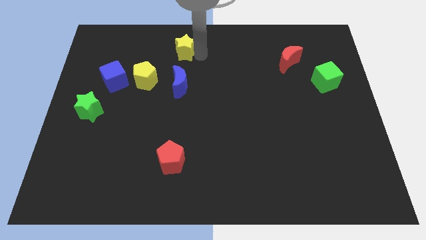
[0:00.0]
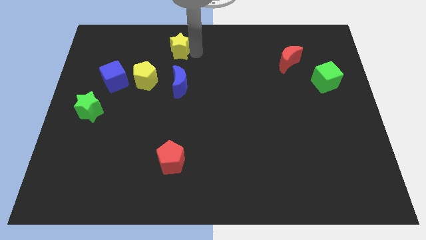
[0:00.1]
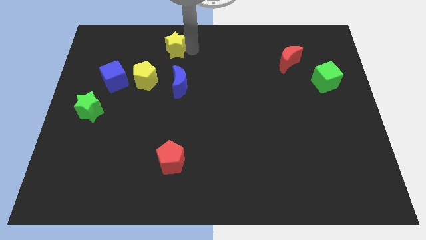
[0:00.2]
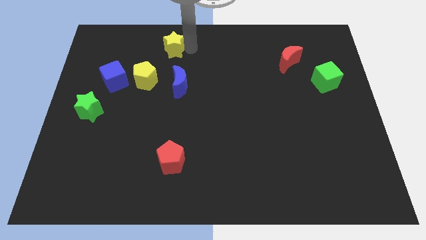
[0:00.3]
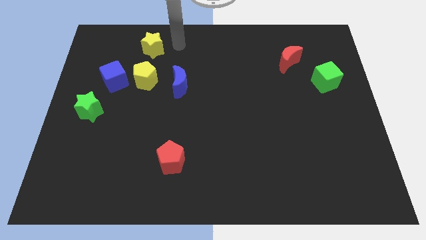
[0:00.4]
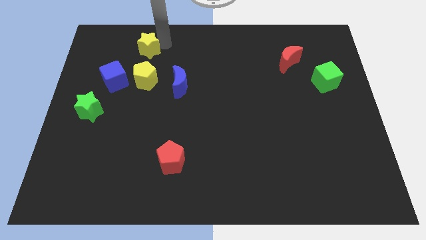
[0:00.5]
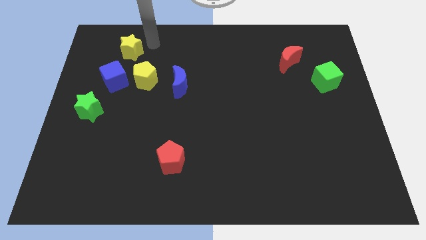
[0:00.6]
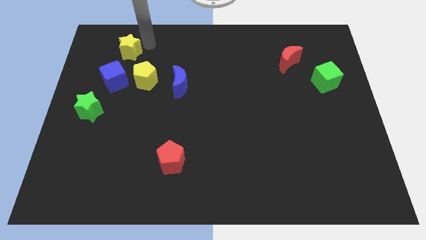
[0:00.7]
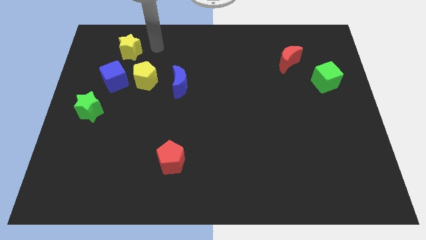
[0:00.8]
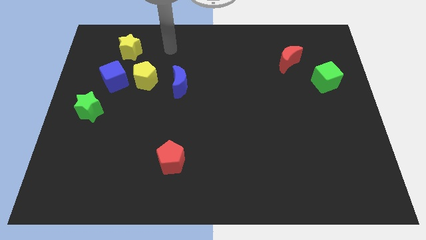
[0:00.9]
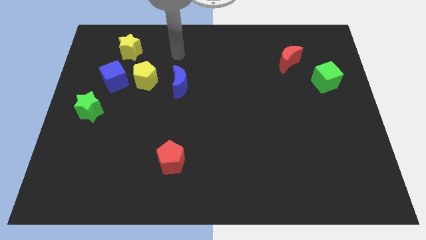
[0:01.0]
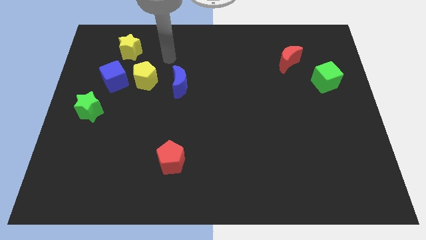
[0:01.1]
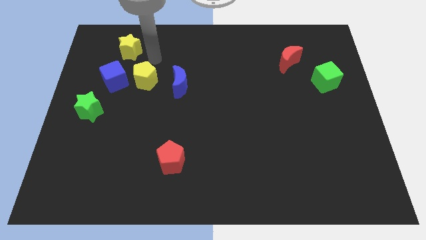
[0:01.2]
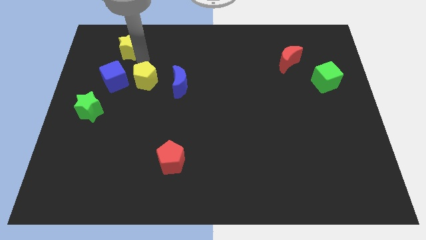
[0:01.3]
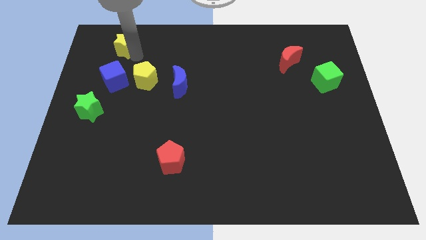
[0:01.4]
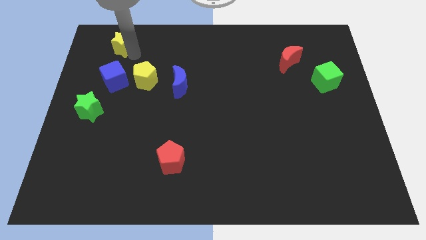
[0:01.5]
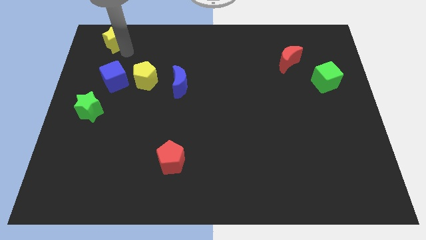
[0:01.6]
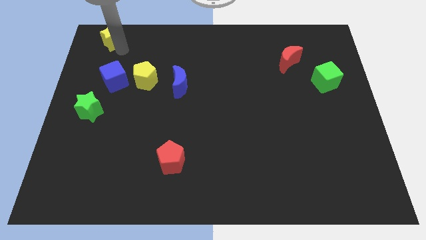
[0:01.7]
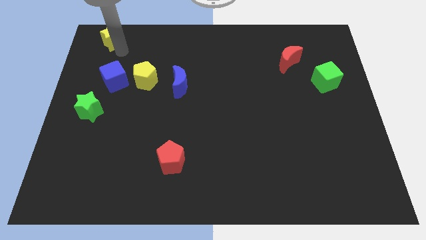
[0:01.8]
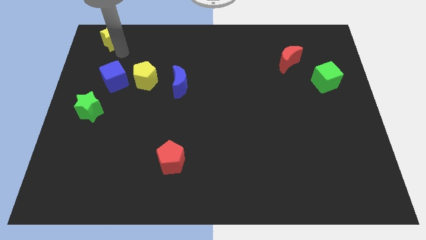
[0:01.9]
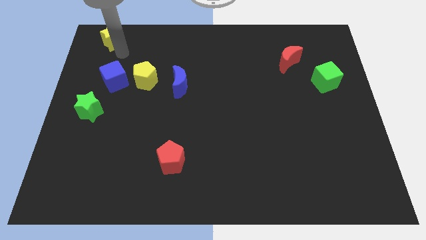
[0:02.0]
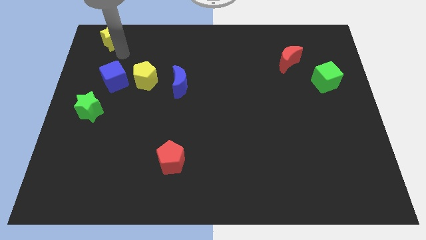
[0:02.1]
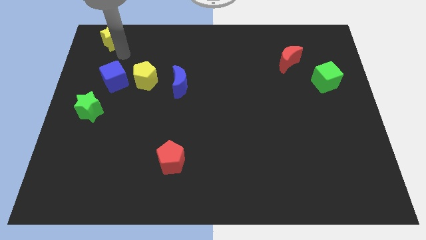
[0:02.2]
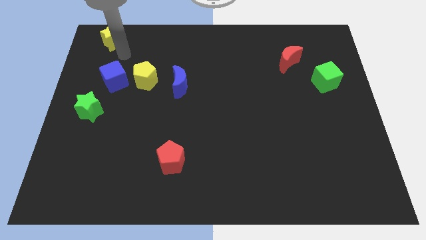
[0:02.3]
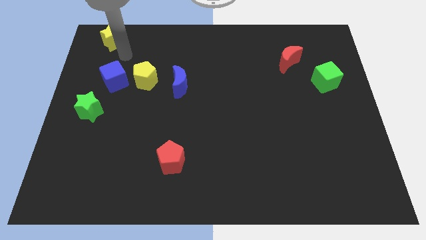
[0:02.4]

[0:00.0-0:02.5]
push the yellow star towards the top left

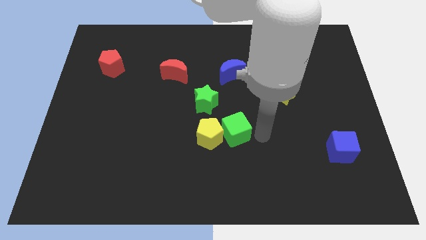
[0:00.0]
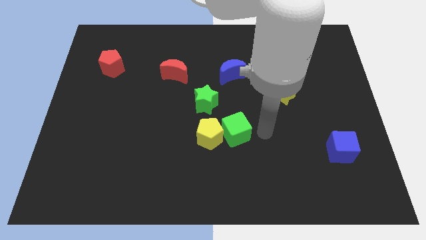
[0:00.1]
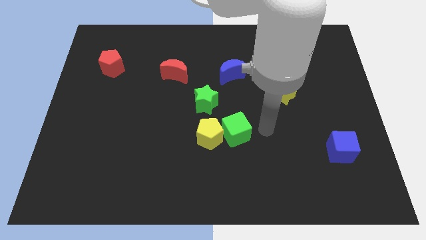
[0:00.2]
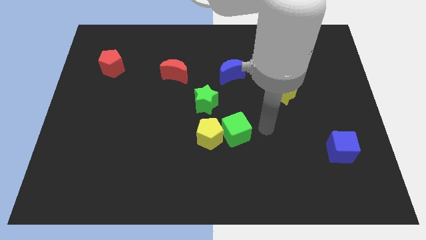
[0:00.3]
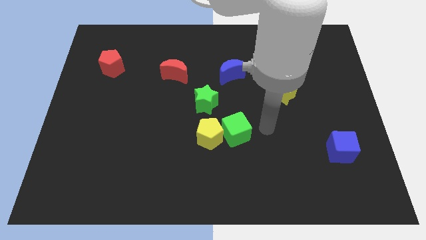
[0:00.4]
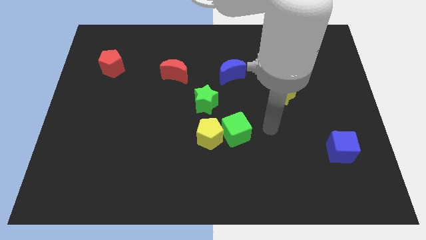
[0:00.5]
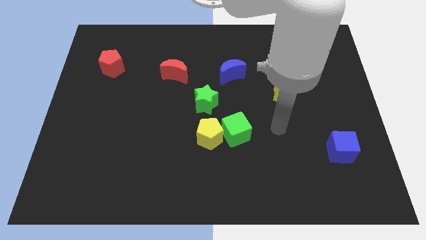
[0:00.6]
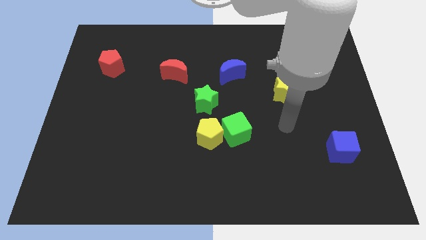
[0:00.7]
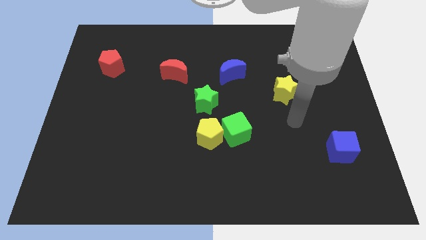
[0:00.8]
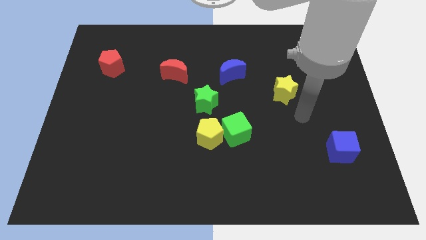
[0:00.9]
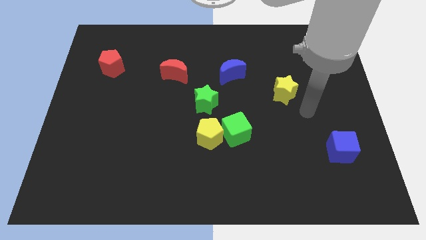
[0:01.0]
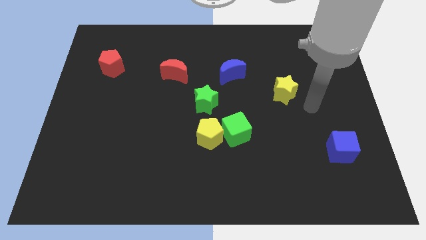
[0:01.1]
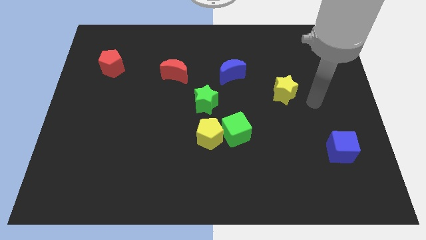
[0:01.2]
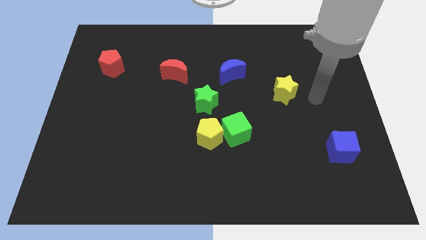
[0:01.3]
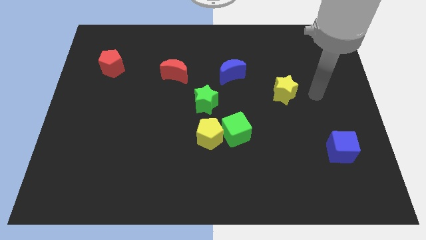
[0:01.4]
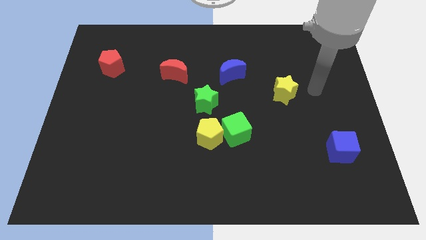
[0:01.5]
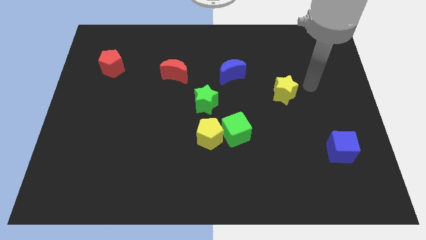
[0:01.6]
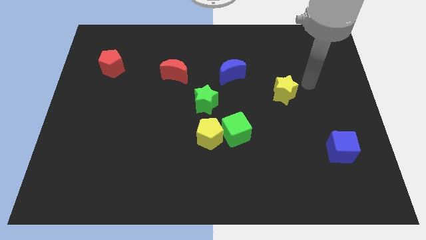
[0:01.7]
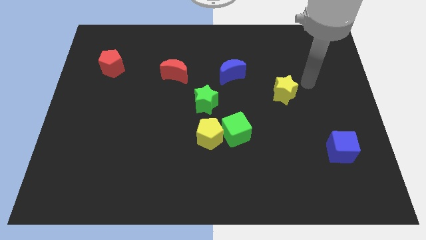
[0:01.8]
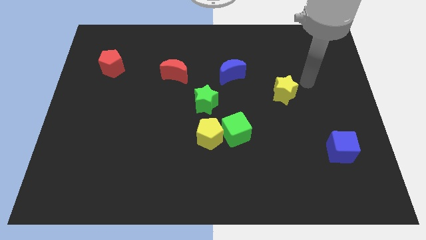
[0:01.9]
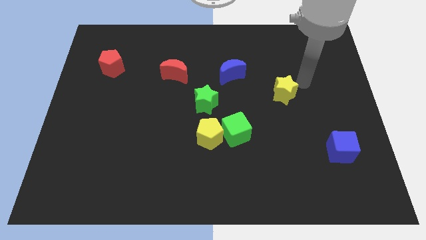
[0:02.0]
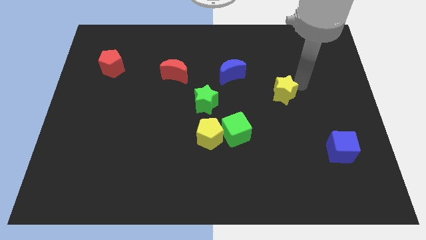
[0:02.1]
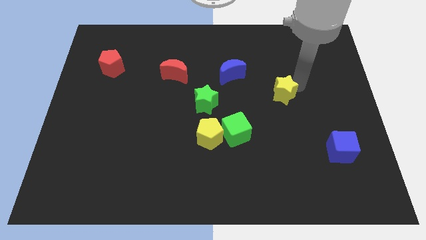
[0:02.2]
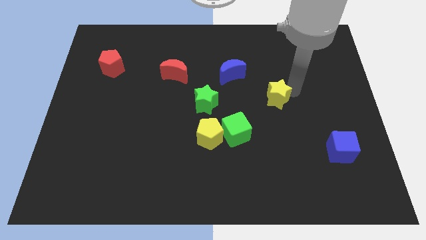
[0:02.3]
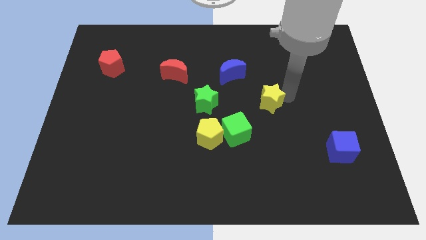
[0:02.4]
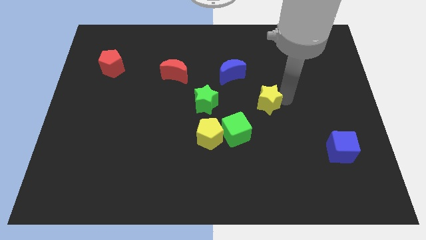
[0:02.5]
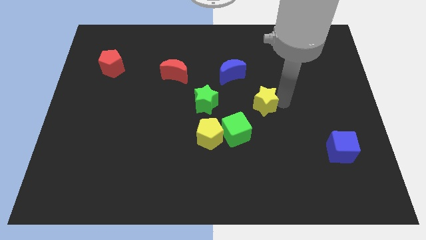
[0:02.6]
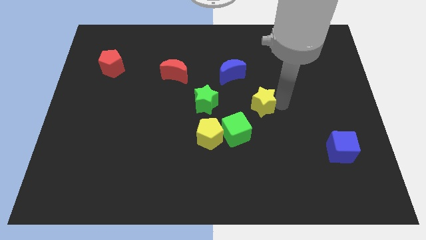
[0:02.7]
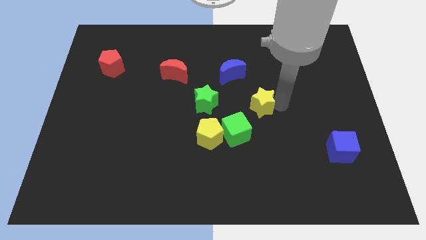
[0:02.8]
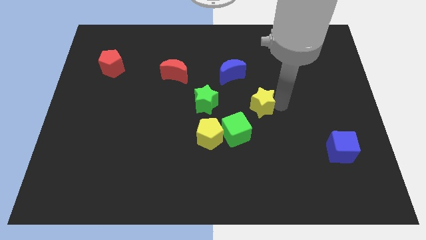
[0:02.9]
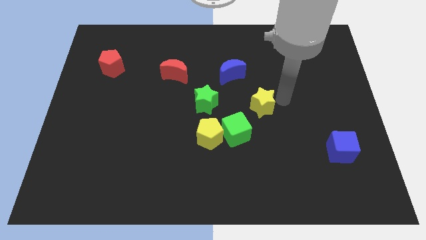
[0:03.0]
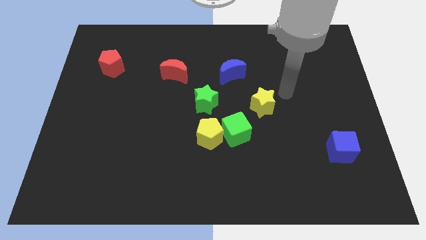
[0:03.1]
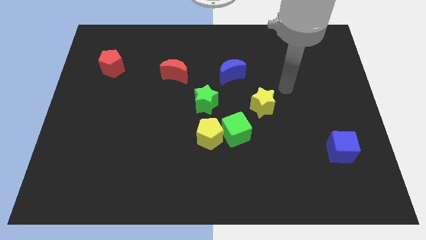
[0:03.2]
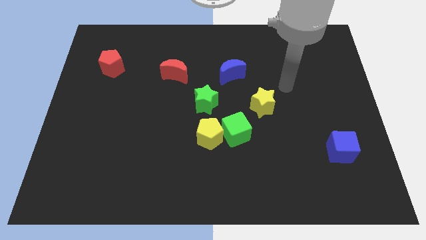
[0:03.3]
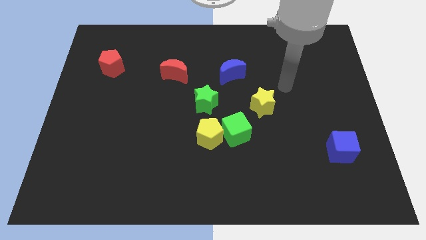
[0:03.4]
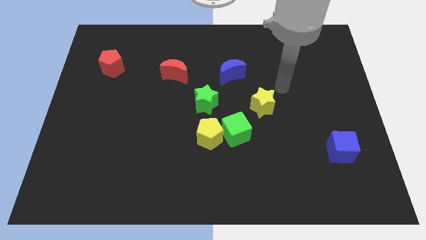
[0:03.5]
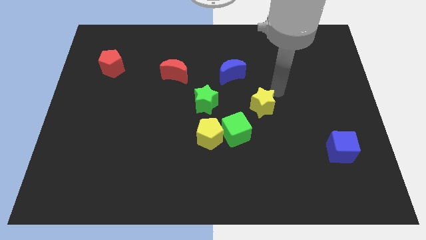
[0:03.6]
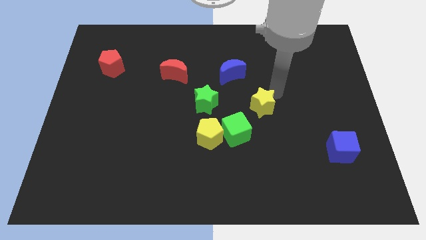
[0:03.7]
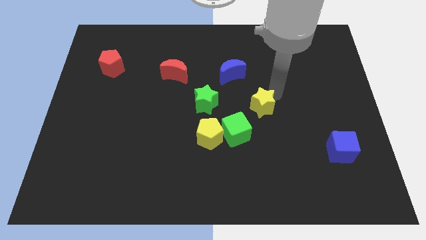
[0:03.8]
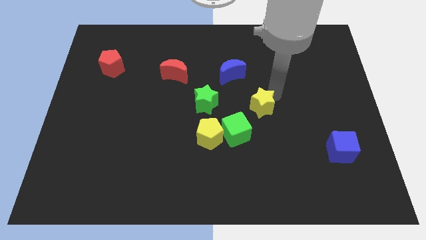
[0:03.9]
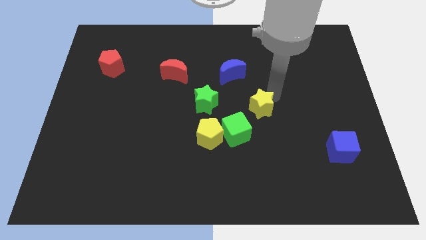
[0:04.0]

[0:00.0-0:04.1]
slide the yellow star to the right of the green star

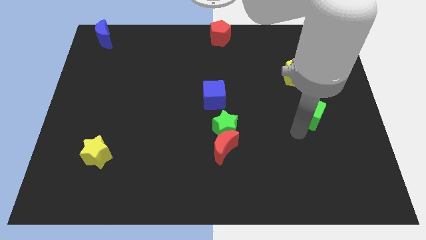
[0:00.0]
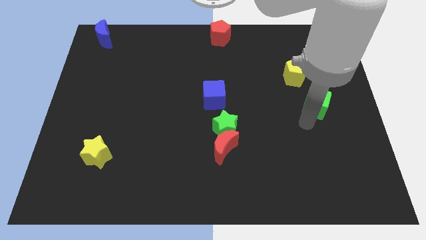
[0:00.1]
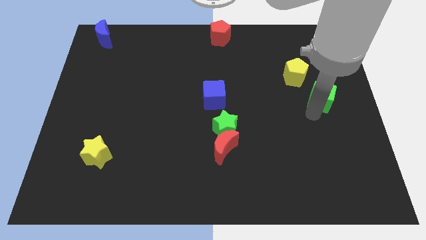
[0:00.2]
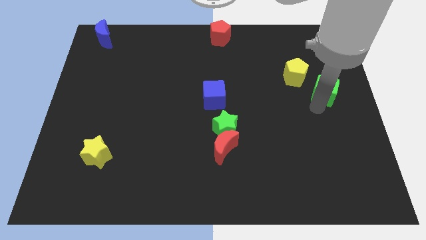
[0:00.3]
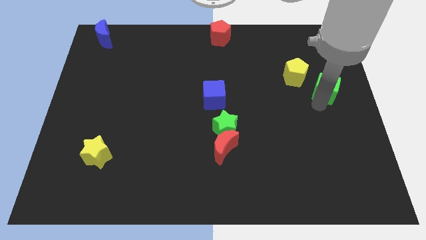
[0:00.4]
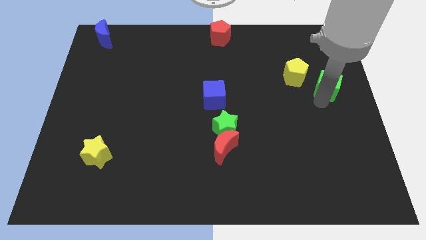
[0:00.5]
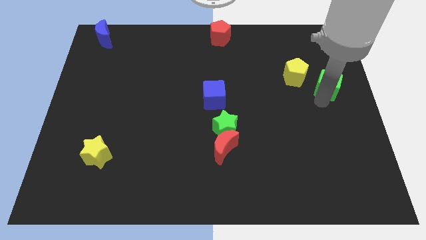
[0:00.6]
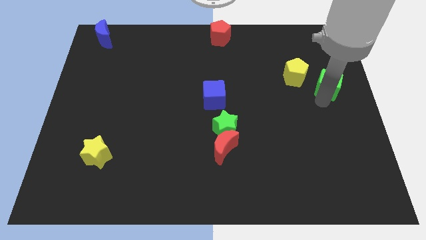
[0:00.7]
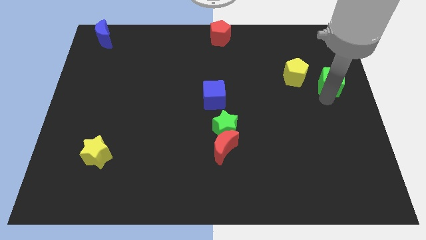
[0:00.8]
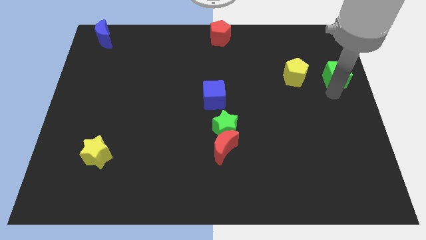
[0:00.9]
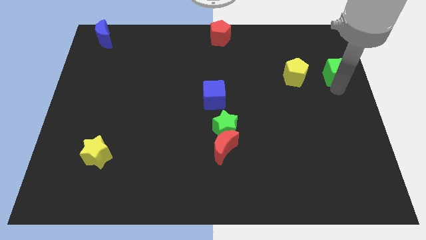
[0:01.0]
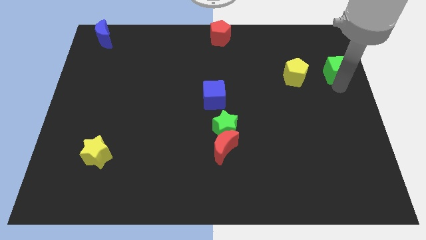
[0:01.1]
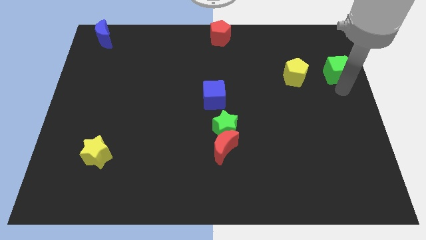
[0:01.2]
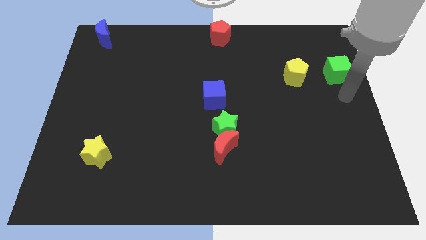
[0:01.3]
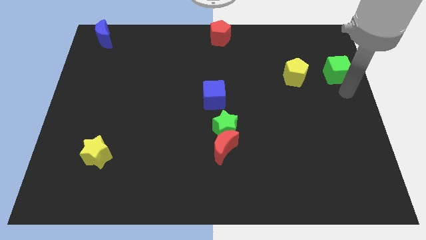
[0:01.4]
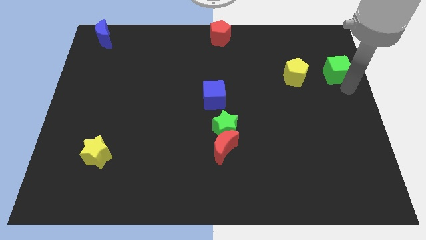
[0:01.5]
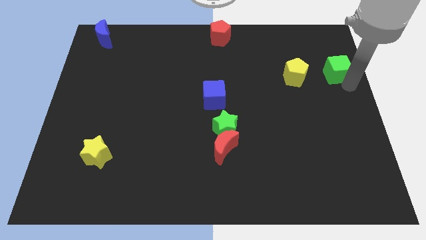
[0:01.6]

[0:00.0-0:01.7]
place the green cube to the right of the yellow pentagon

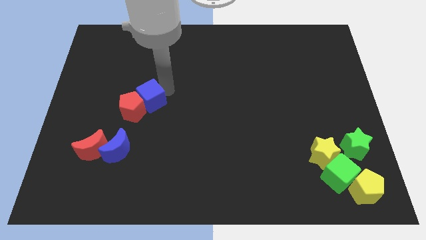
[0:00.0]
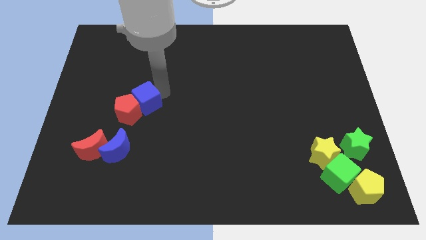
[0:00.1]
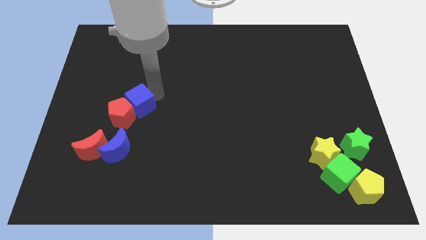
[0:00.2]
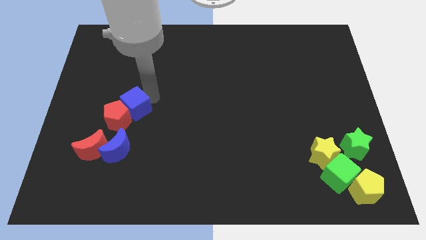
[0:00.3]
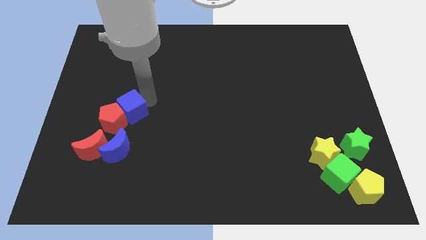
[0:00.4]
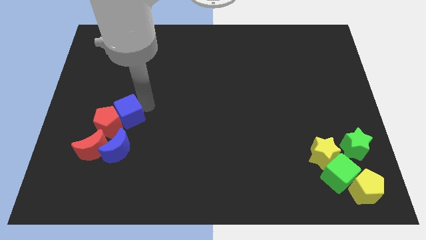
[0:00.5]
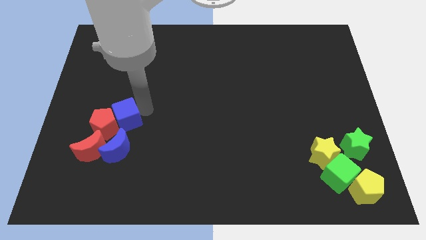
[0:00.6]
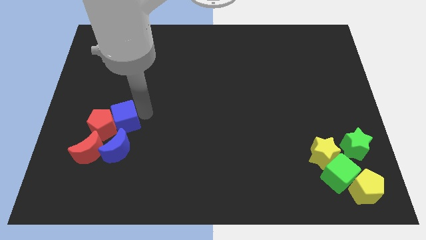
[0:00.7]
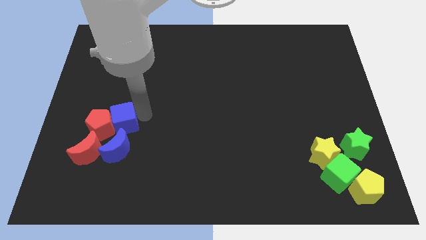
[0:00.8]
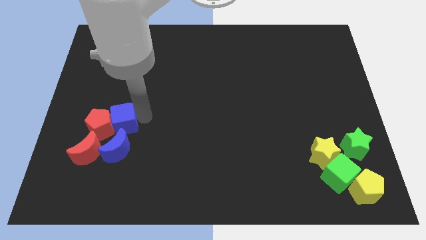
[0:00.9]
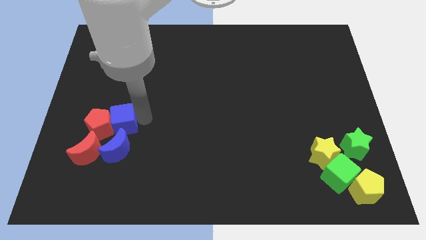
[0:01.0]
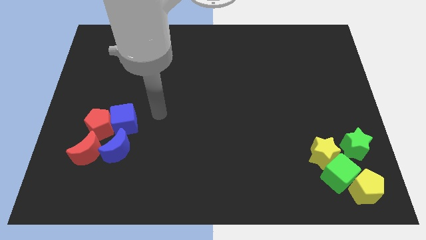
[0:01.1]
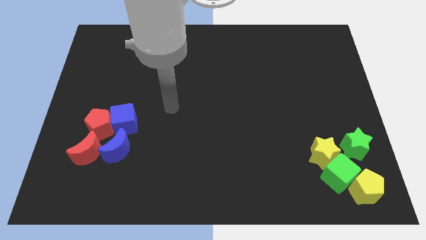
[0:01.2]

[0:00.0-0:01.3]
push the red pentagon with blue cube into the red moon
